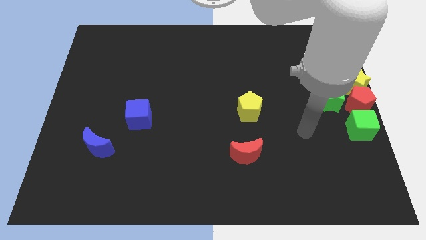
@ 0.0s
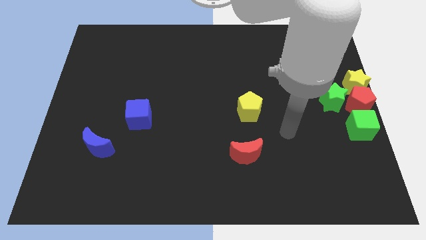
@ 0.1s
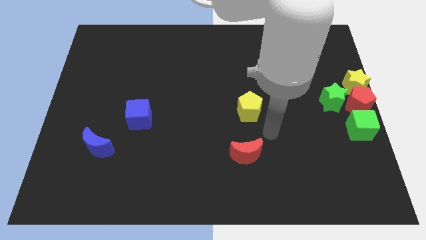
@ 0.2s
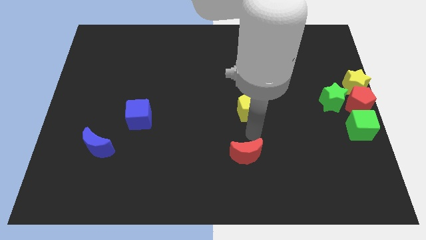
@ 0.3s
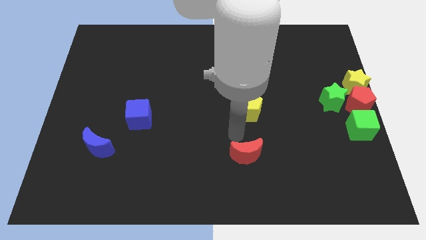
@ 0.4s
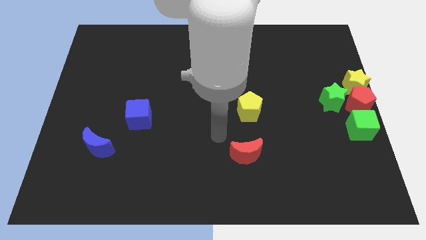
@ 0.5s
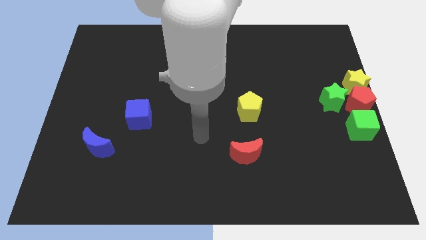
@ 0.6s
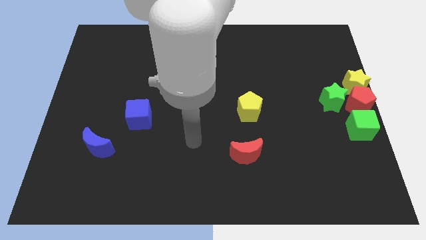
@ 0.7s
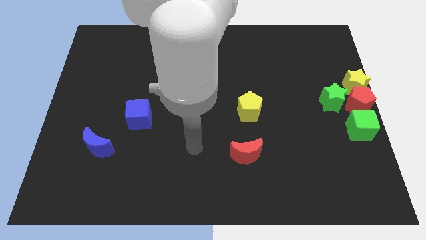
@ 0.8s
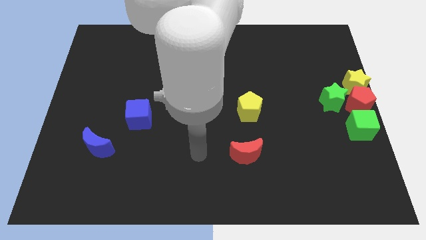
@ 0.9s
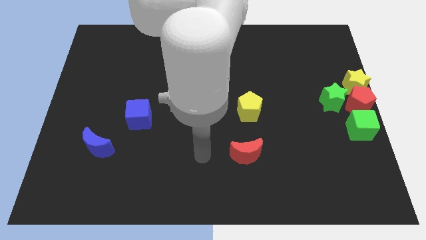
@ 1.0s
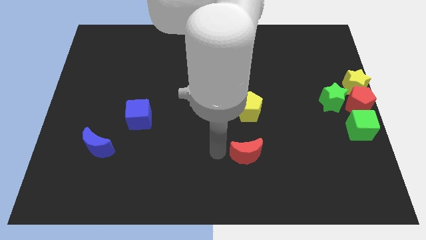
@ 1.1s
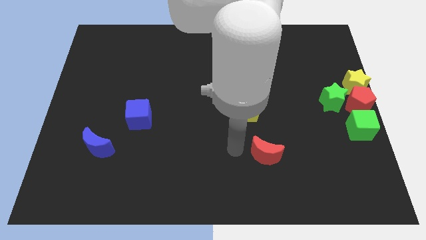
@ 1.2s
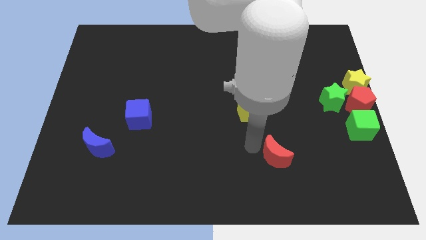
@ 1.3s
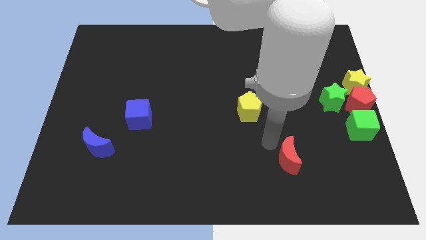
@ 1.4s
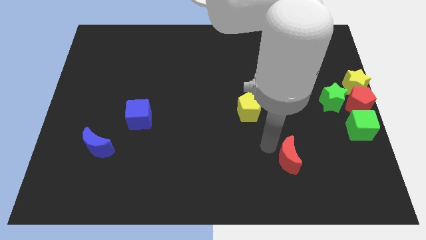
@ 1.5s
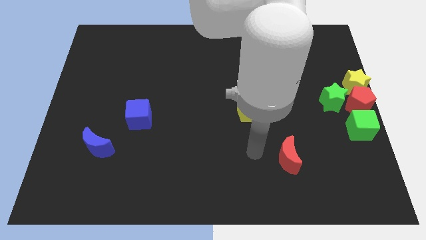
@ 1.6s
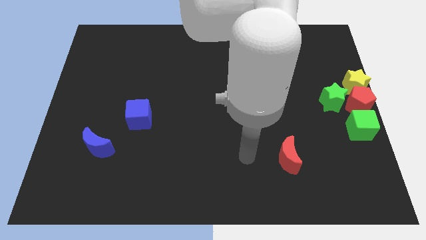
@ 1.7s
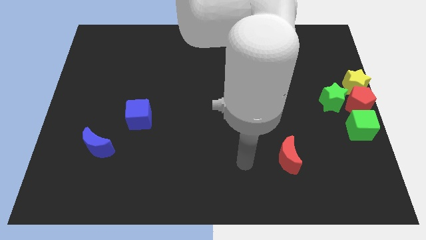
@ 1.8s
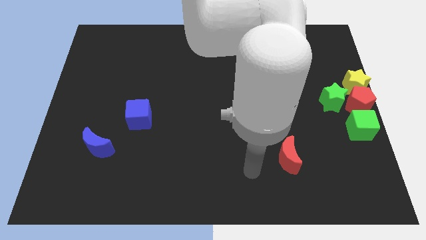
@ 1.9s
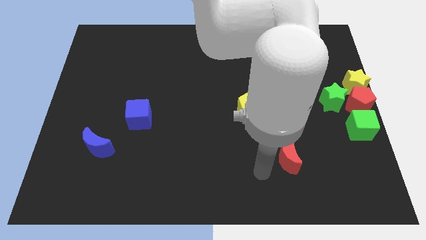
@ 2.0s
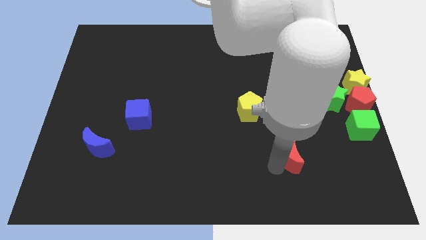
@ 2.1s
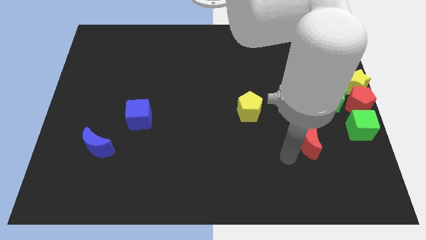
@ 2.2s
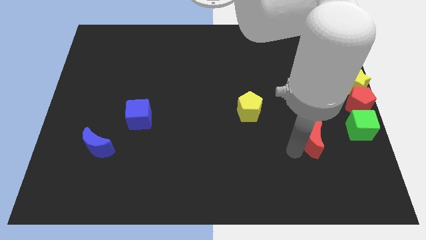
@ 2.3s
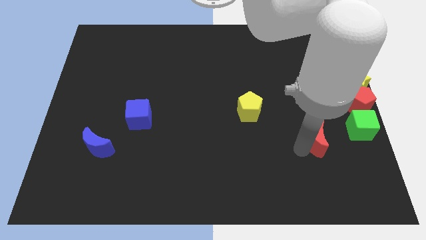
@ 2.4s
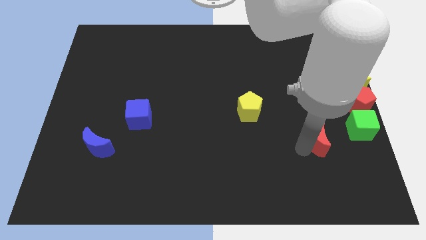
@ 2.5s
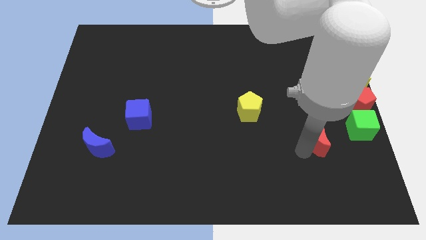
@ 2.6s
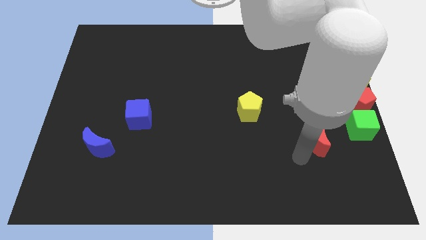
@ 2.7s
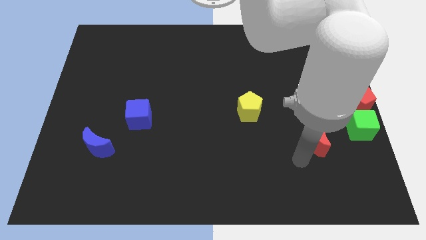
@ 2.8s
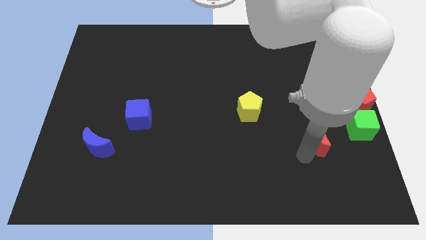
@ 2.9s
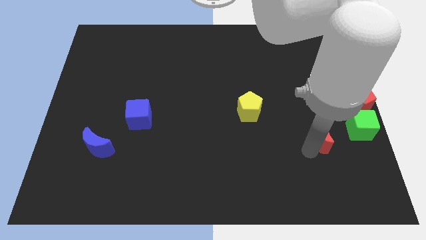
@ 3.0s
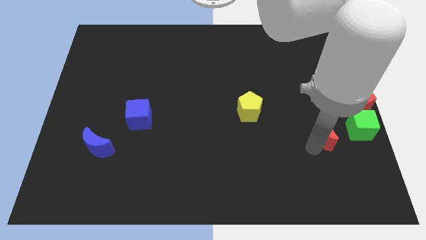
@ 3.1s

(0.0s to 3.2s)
push the red crescent towards the green cube

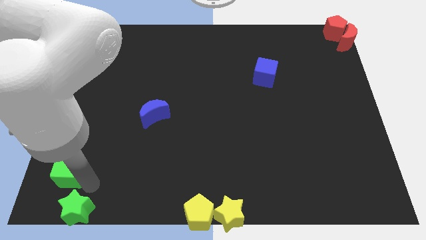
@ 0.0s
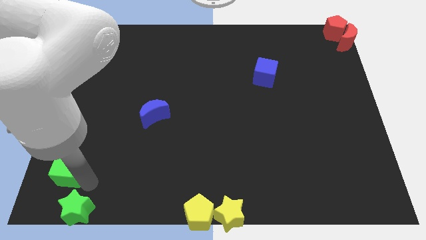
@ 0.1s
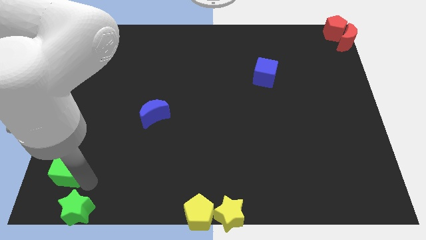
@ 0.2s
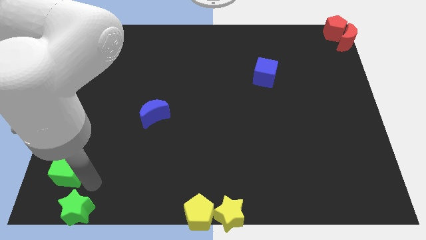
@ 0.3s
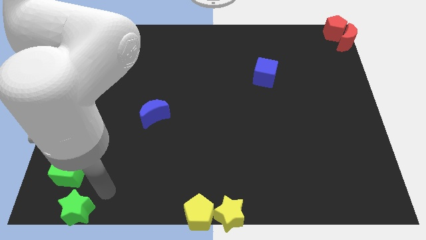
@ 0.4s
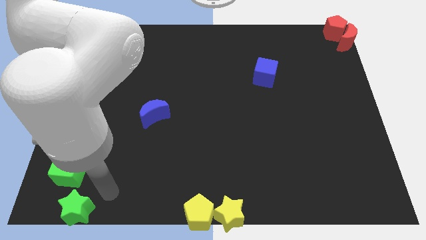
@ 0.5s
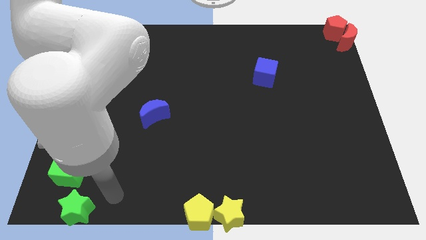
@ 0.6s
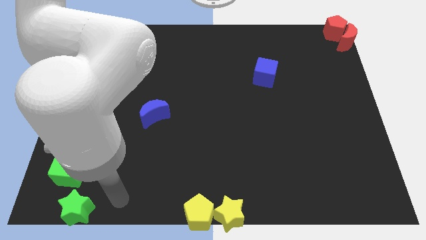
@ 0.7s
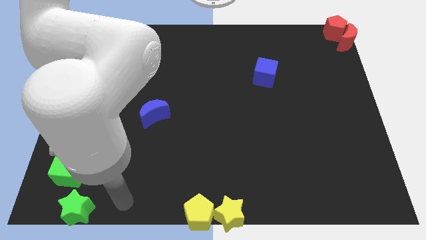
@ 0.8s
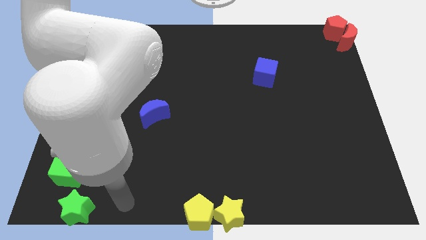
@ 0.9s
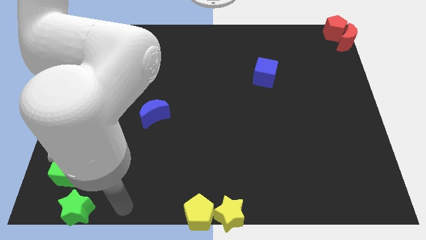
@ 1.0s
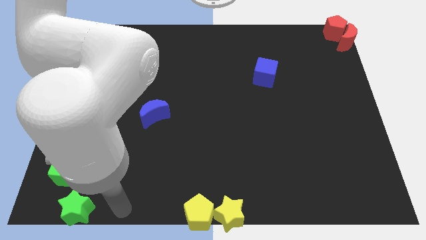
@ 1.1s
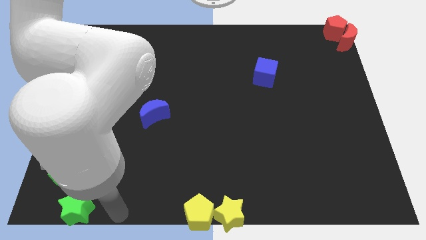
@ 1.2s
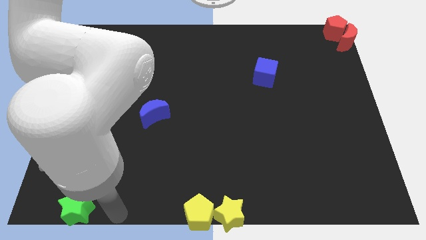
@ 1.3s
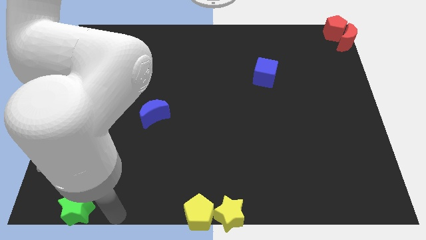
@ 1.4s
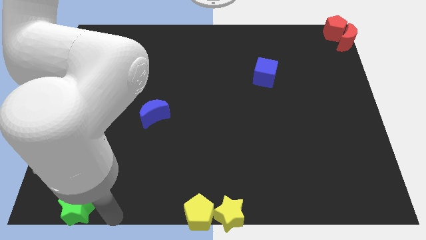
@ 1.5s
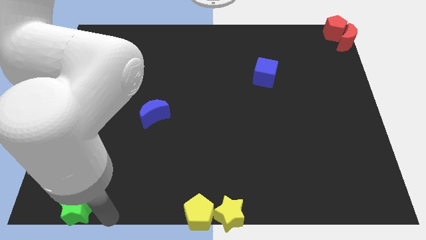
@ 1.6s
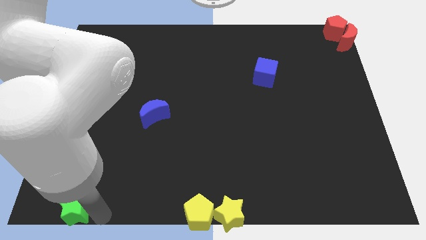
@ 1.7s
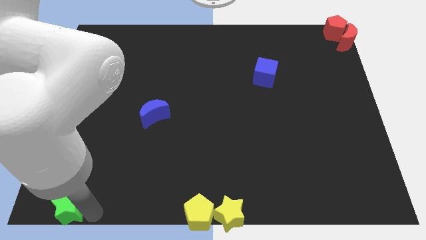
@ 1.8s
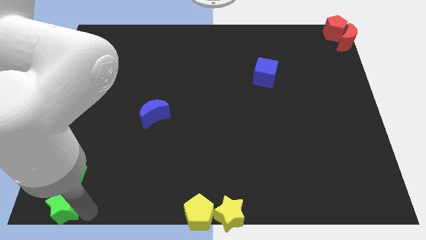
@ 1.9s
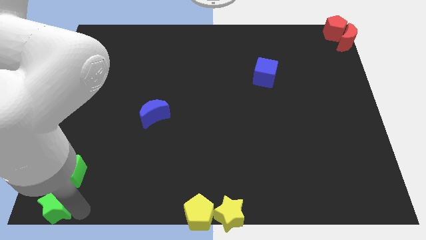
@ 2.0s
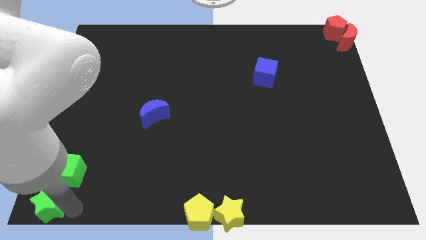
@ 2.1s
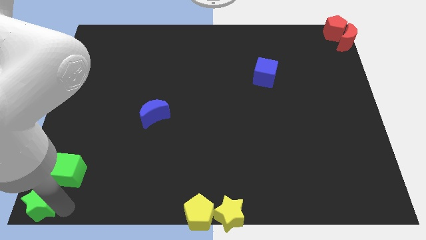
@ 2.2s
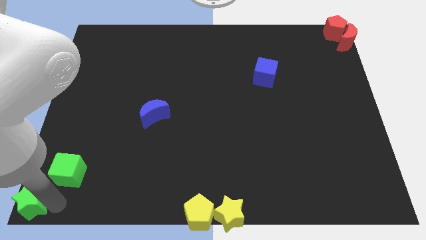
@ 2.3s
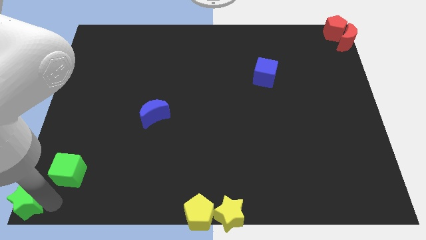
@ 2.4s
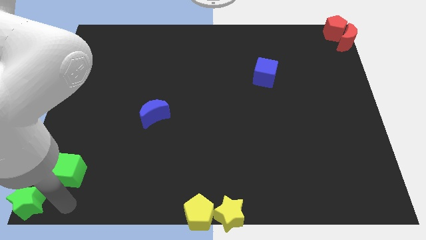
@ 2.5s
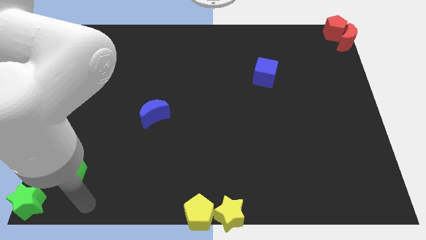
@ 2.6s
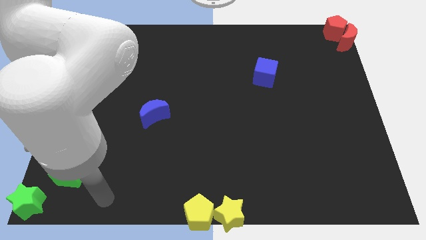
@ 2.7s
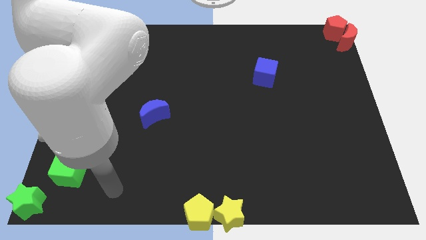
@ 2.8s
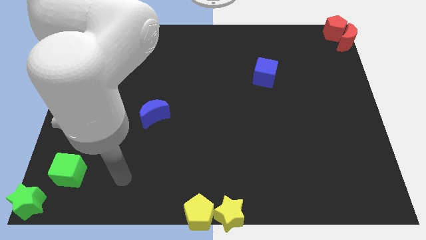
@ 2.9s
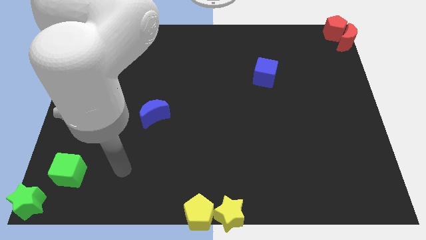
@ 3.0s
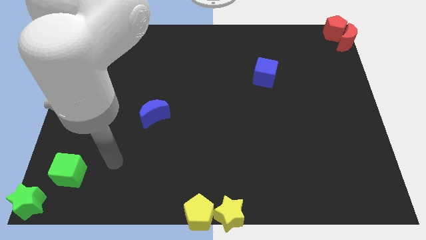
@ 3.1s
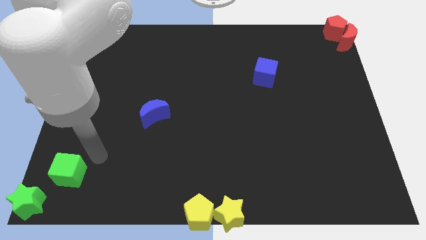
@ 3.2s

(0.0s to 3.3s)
drag the green star diagonally towards the bottom left to the green cube

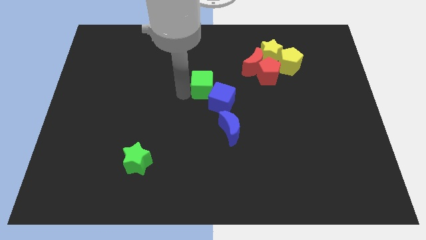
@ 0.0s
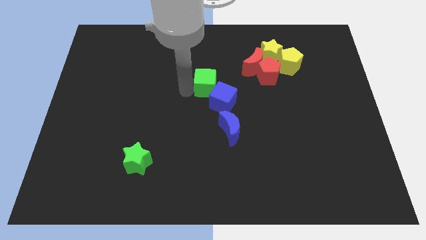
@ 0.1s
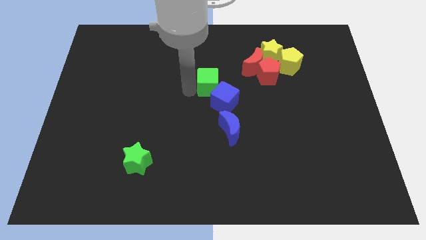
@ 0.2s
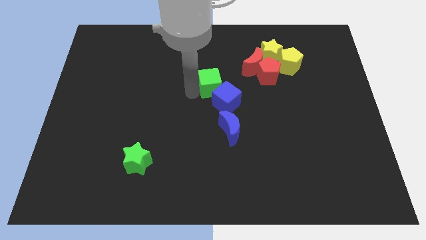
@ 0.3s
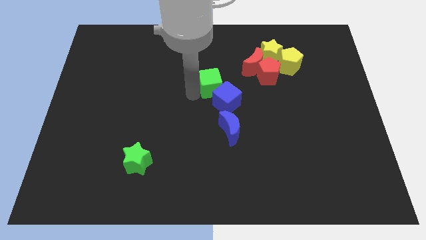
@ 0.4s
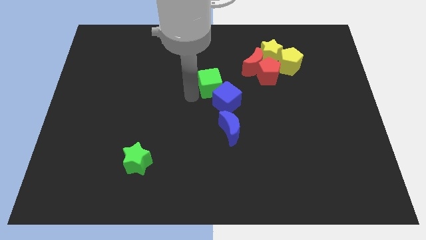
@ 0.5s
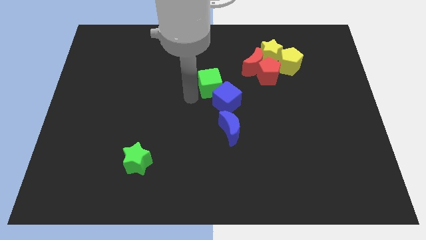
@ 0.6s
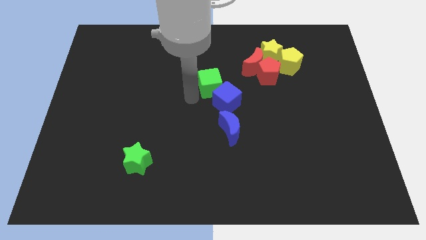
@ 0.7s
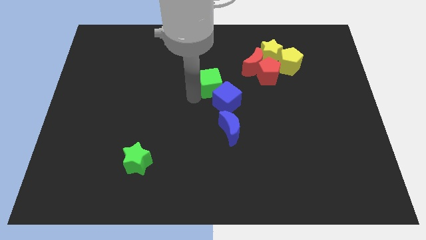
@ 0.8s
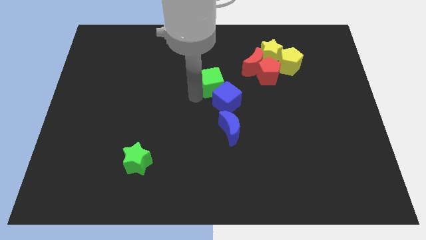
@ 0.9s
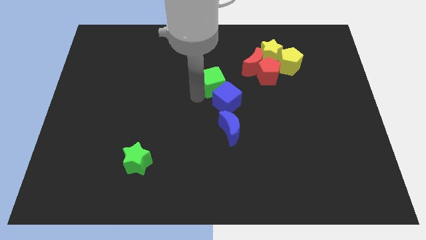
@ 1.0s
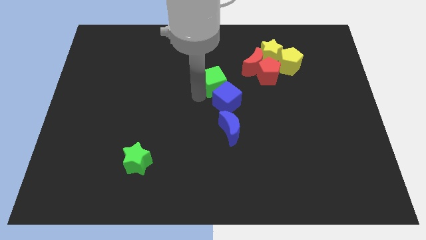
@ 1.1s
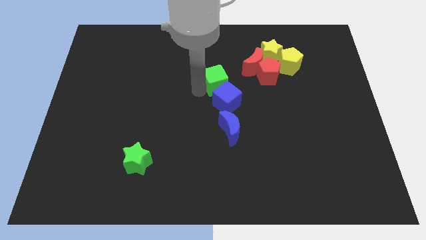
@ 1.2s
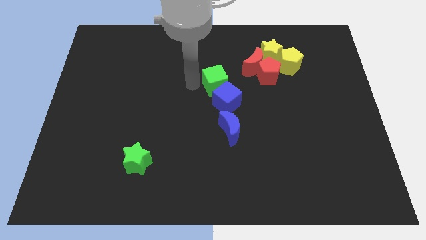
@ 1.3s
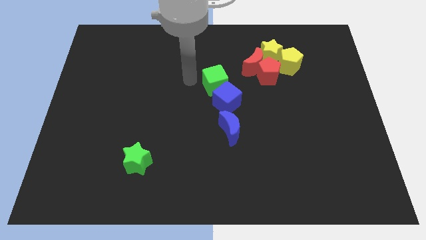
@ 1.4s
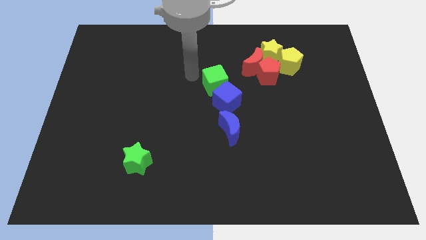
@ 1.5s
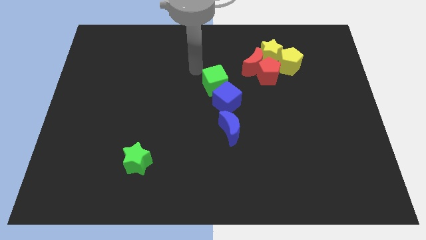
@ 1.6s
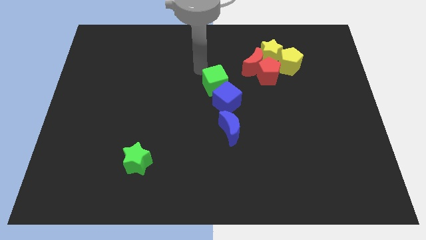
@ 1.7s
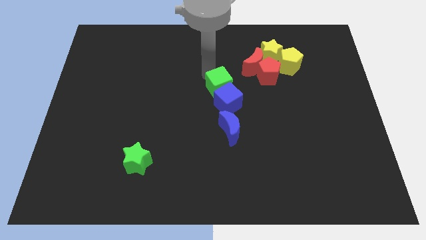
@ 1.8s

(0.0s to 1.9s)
push the green cube into the blue cube

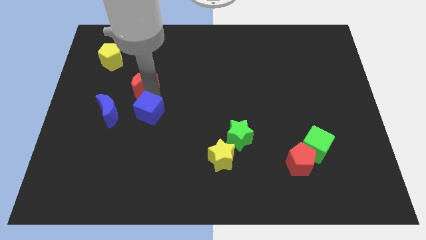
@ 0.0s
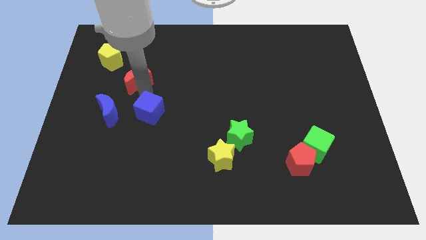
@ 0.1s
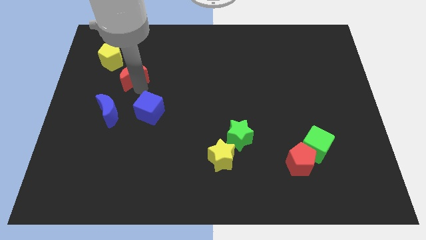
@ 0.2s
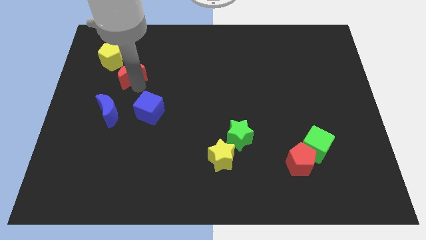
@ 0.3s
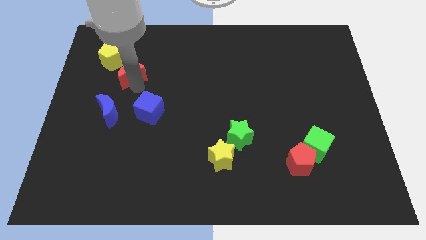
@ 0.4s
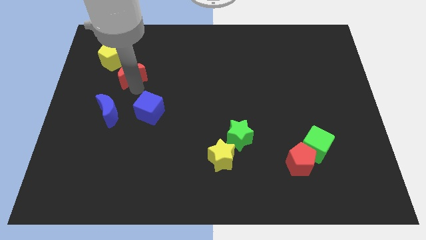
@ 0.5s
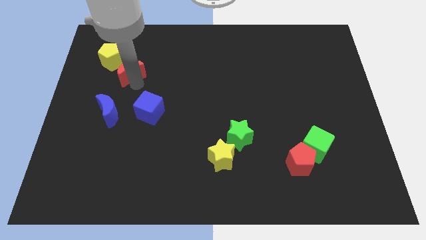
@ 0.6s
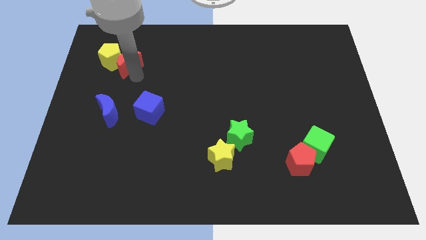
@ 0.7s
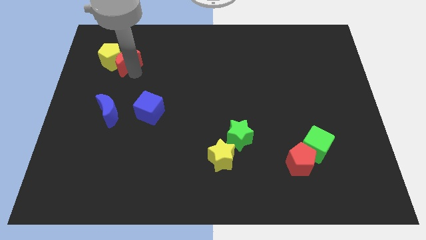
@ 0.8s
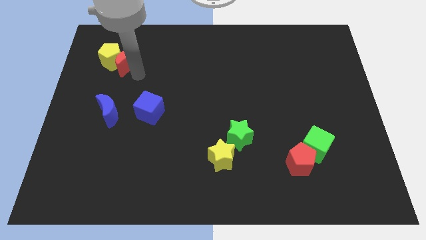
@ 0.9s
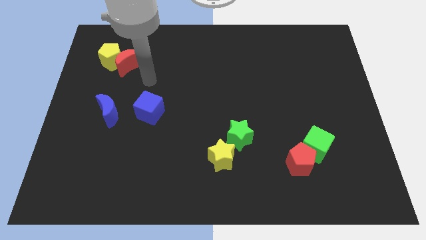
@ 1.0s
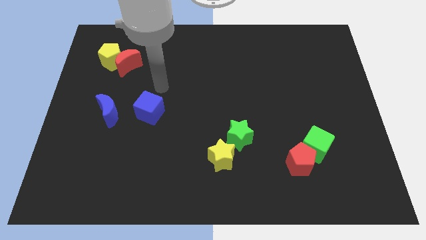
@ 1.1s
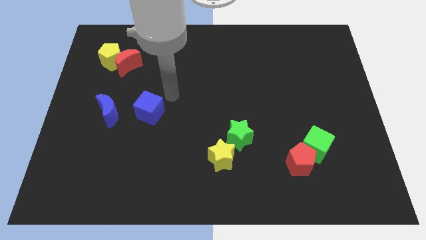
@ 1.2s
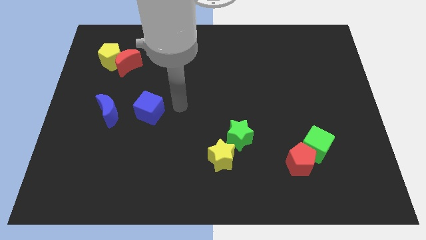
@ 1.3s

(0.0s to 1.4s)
move the red moon into the yellow pentagon
